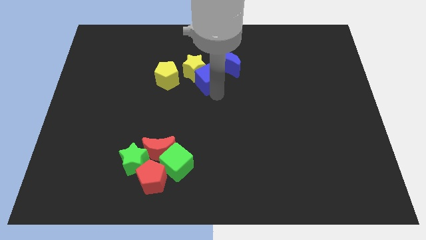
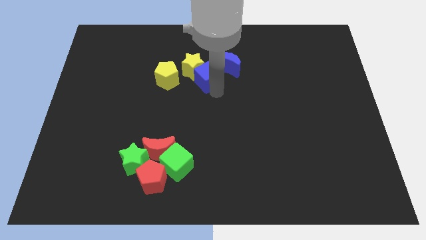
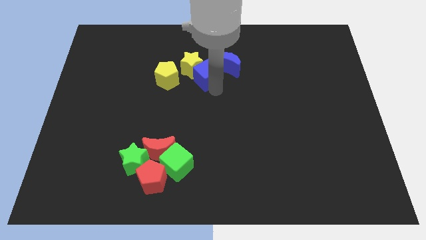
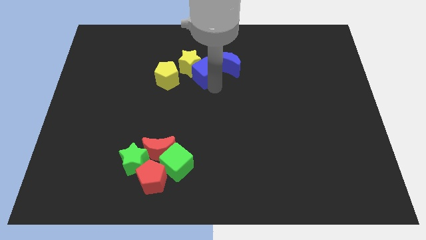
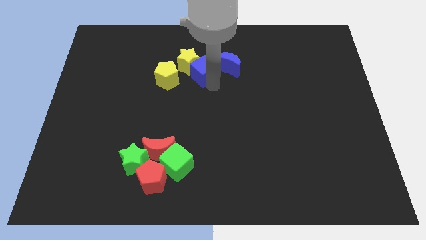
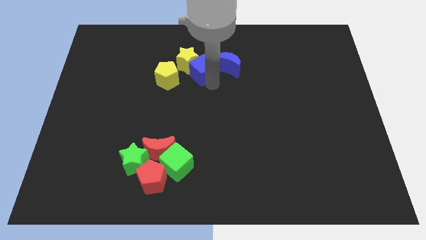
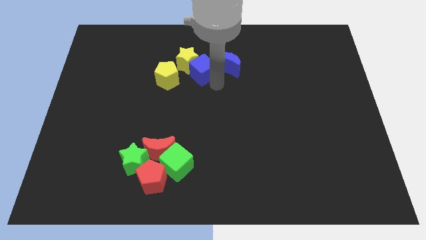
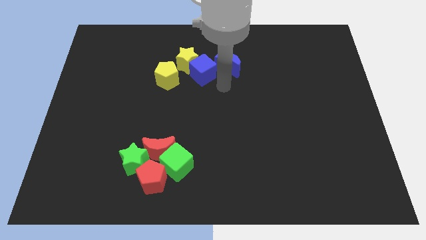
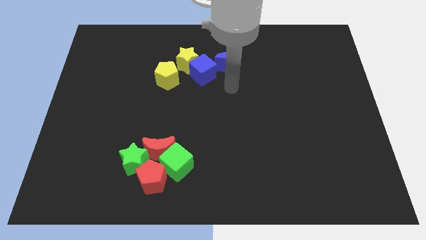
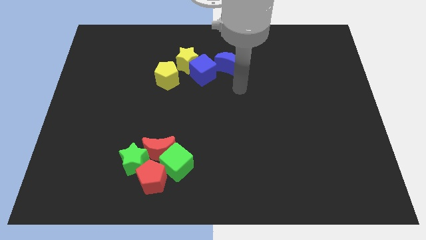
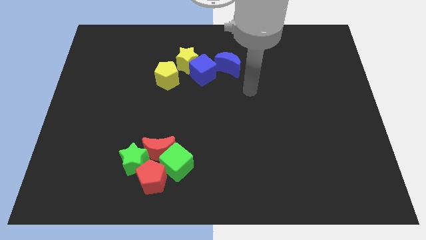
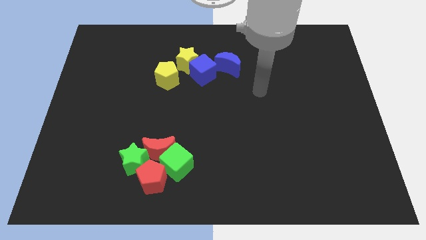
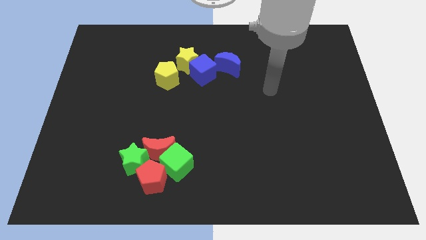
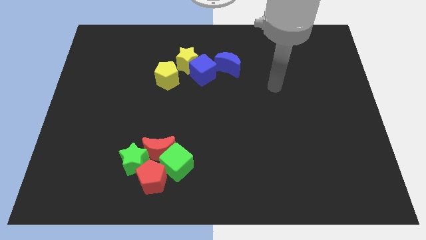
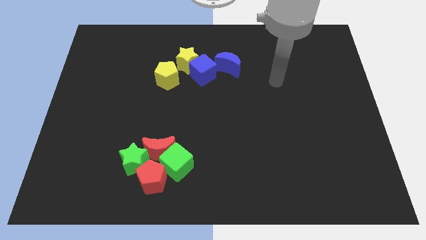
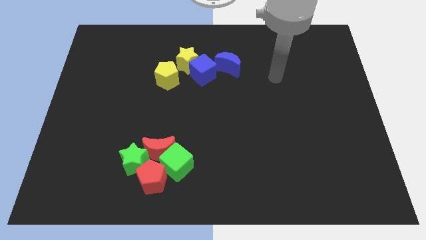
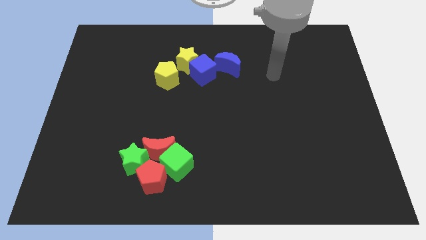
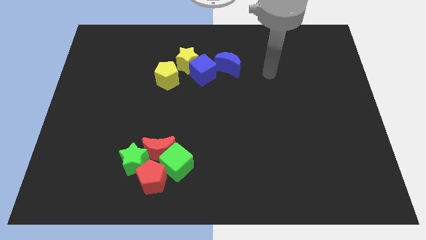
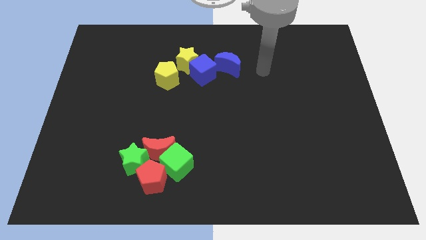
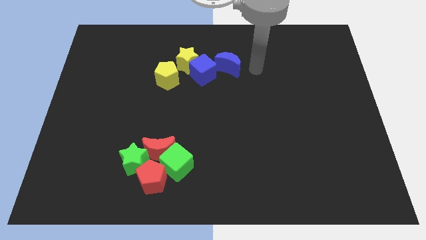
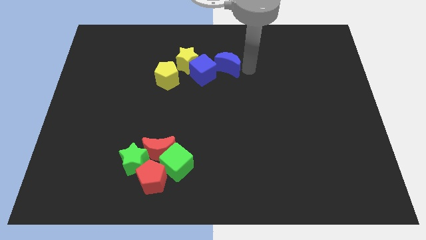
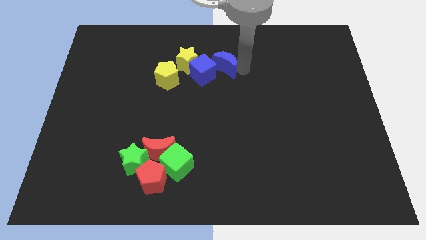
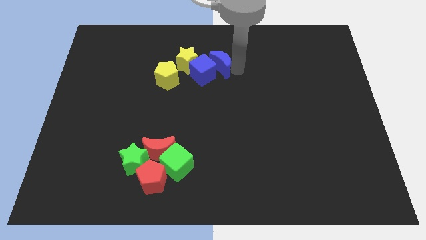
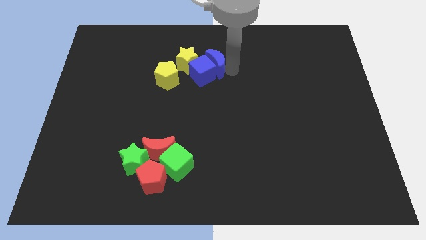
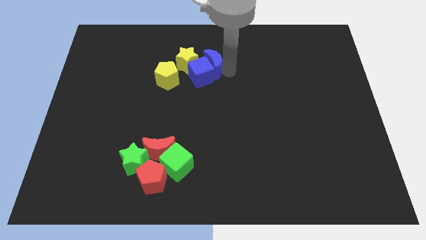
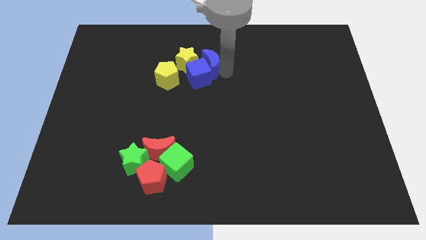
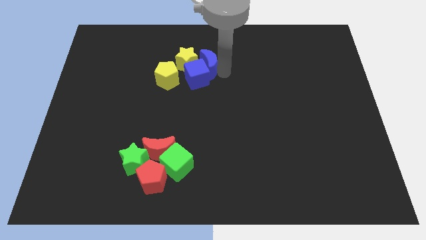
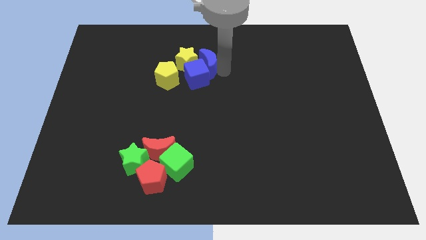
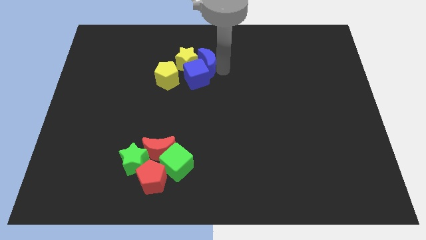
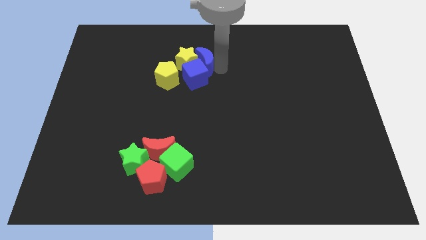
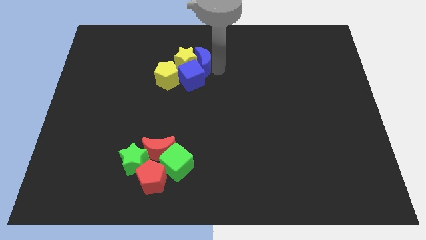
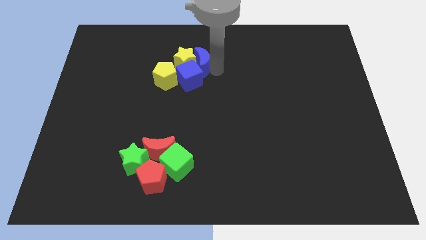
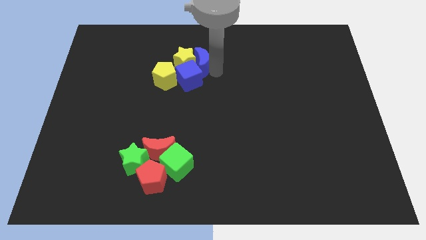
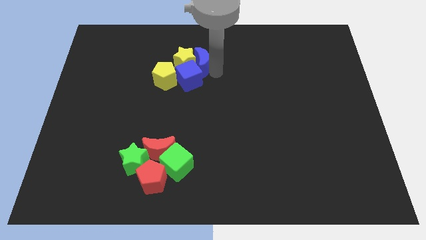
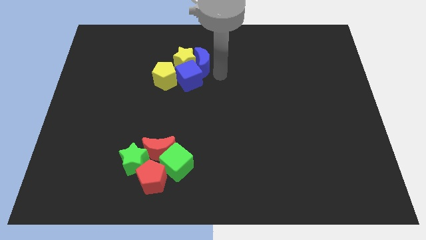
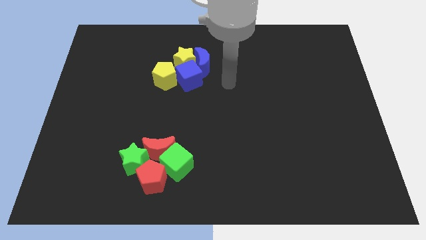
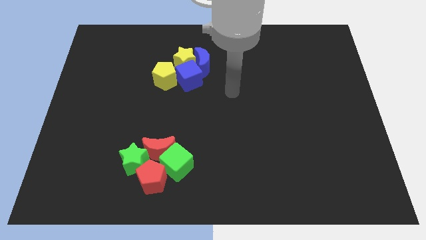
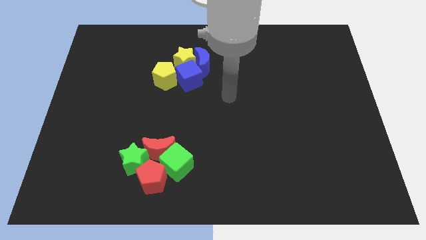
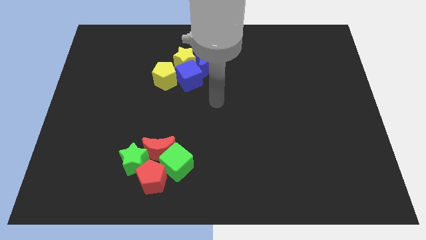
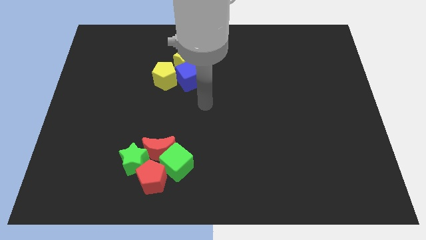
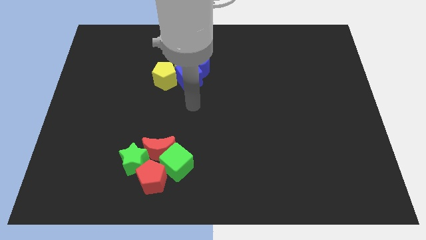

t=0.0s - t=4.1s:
move the blue crescent into yellow star along with blue cube

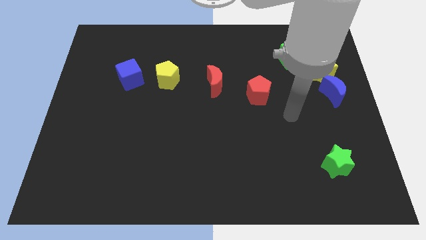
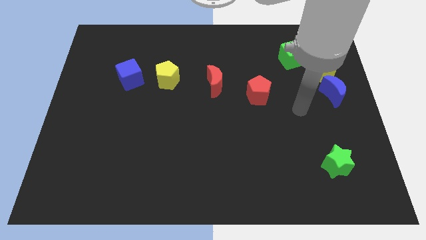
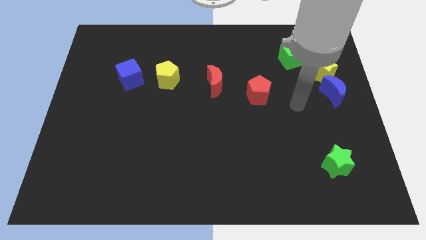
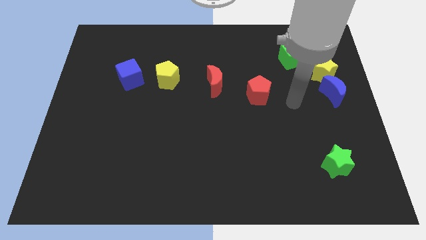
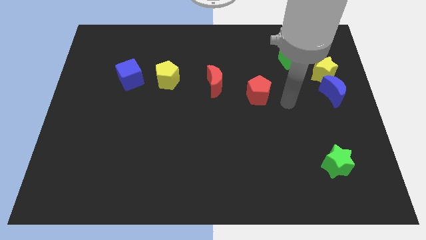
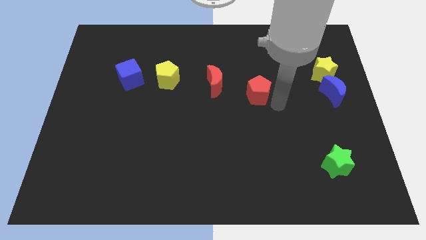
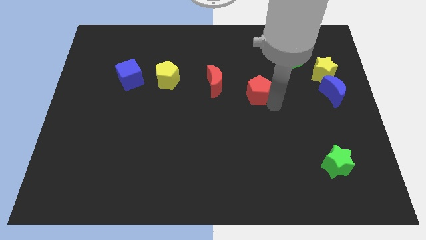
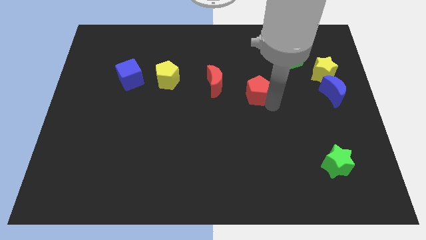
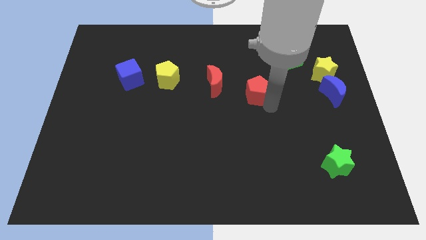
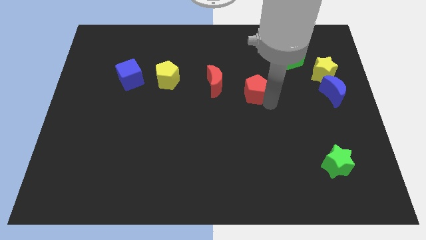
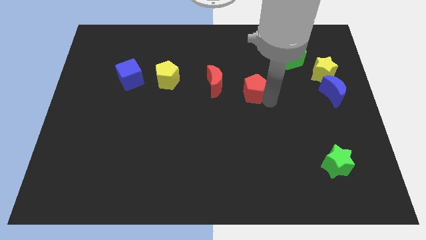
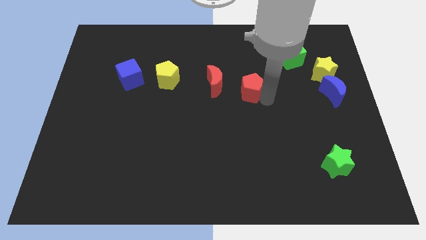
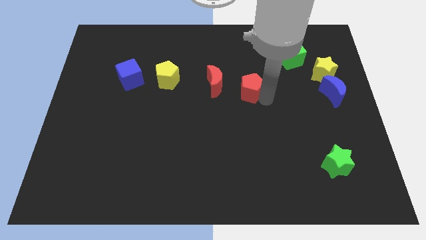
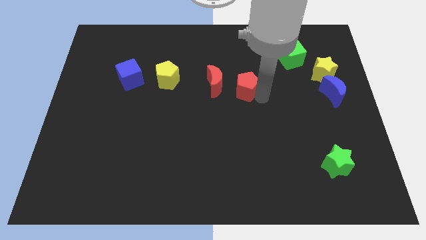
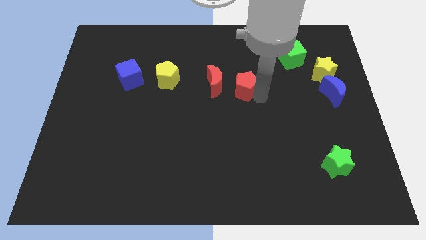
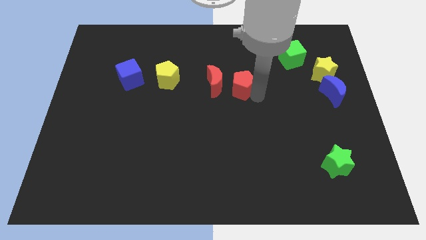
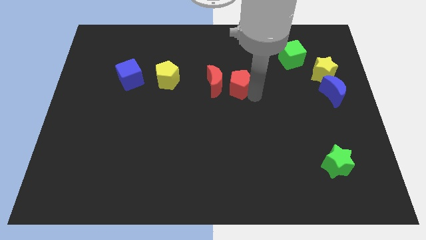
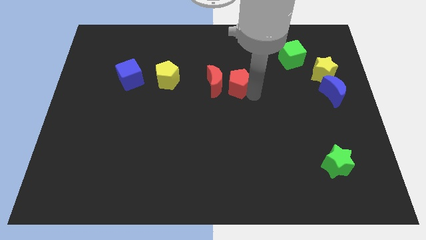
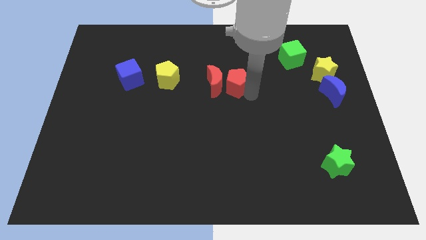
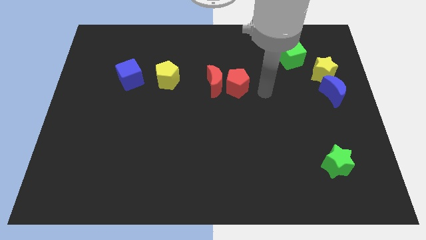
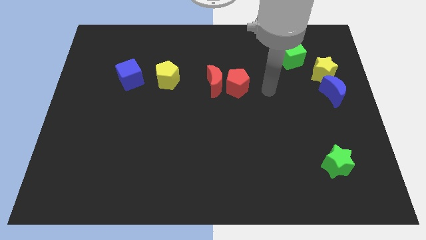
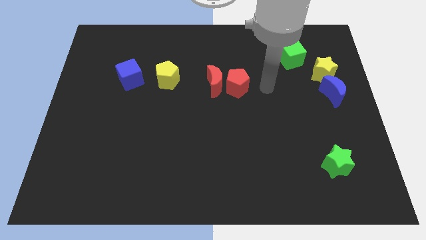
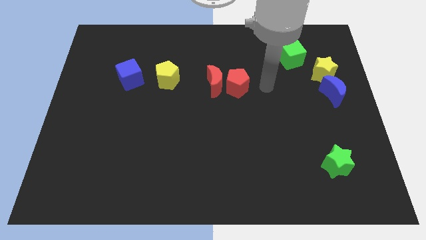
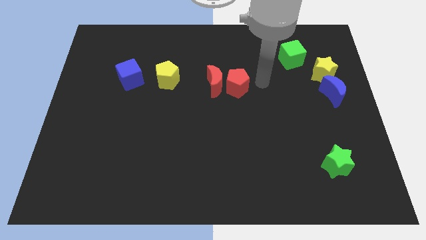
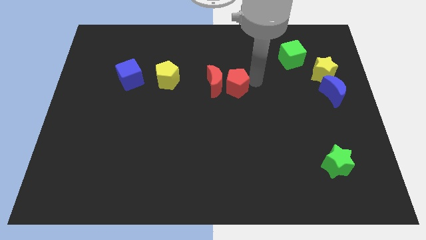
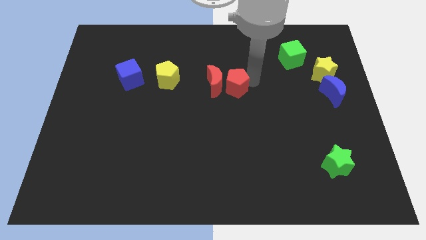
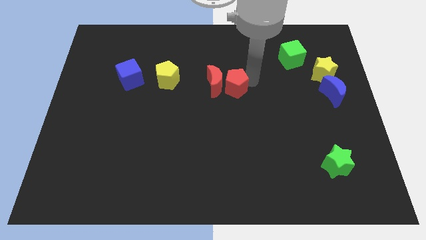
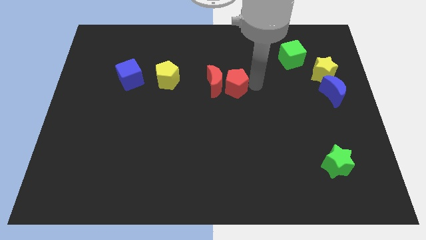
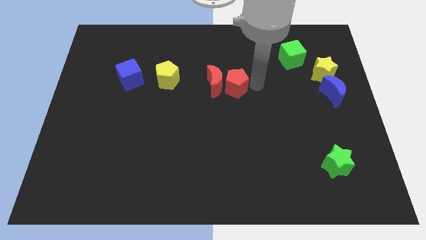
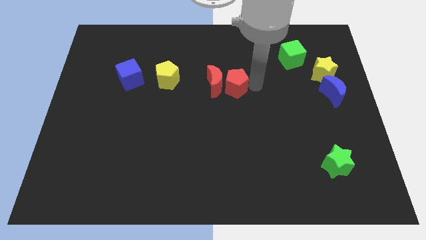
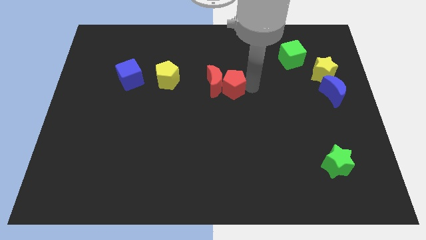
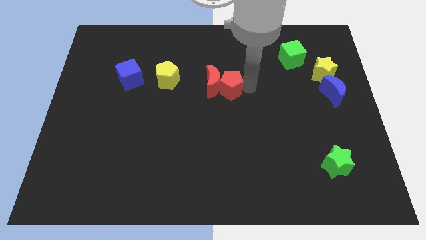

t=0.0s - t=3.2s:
move red pentagon into red moon

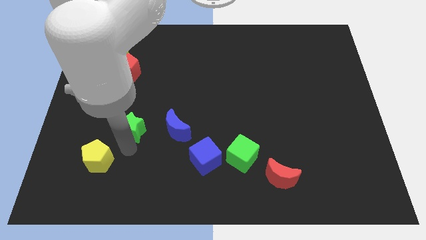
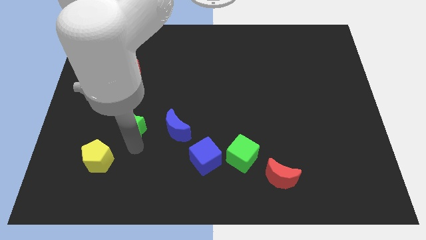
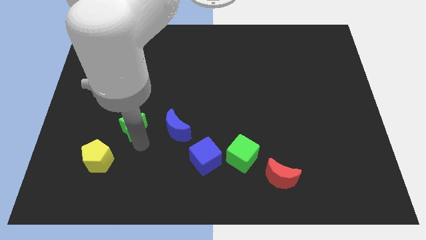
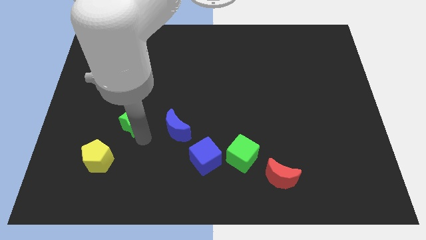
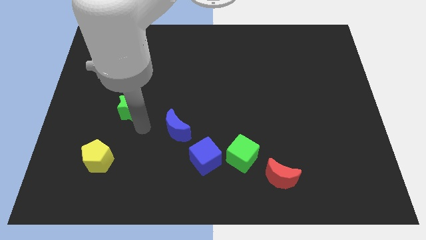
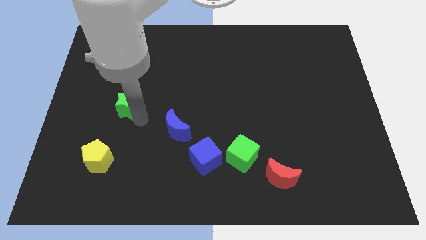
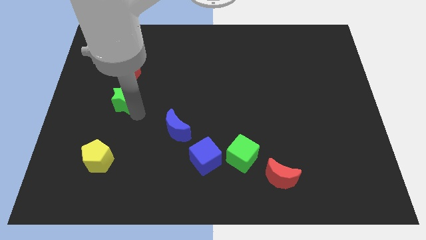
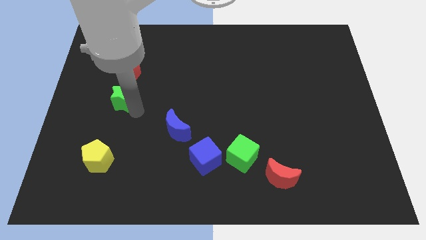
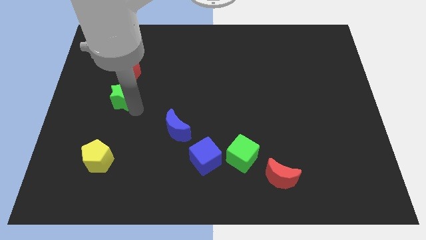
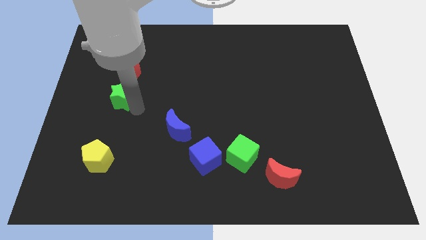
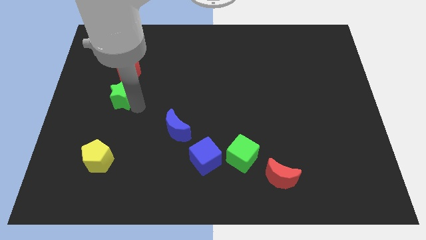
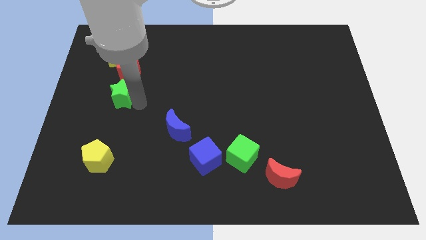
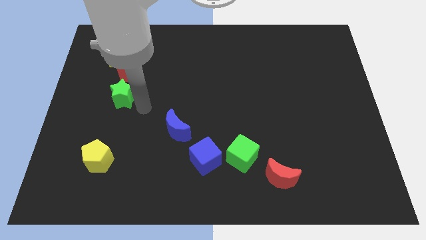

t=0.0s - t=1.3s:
move the green star below the red pentagon

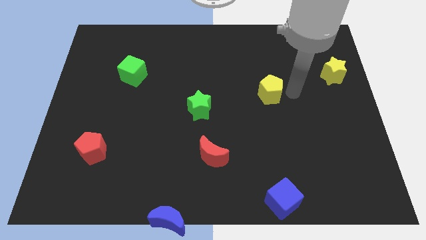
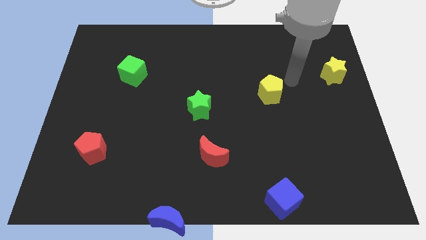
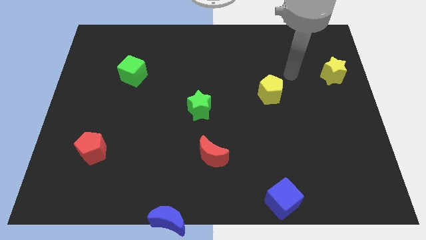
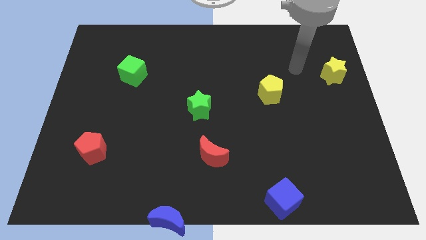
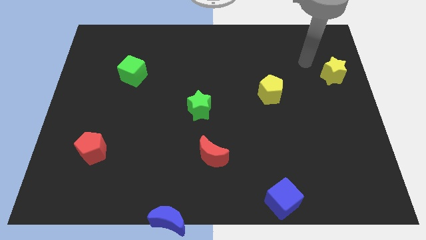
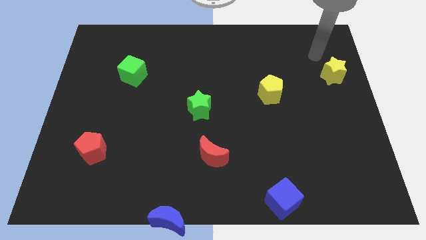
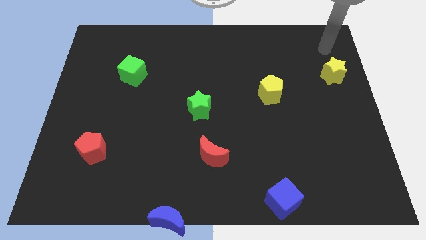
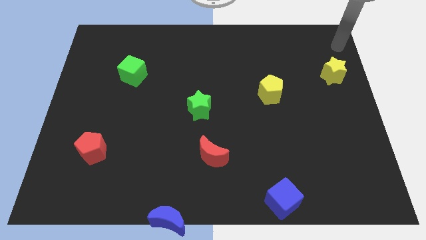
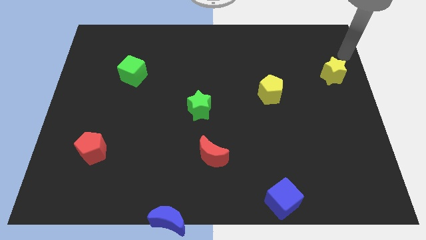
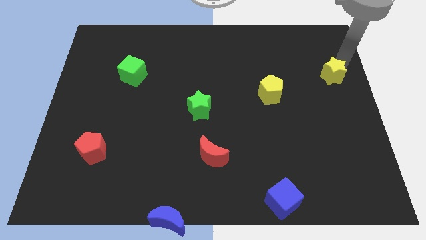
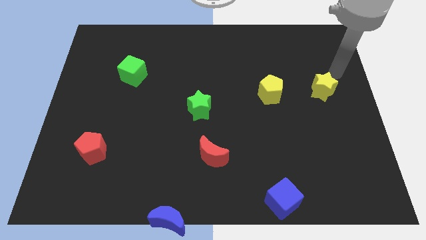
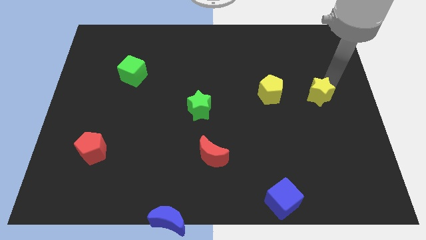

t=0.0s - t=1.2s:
move the yellow star right to the yellow pentagon
